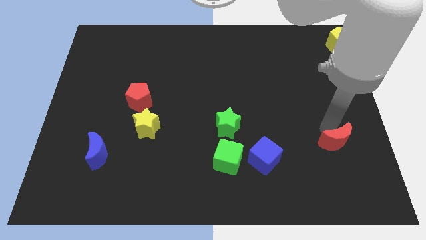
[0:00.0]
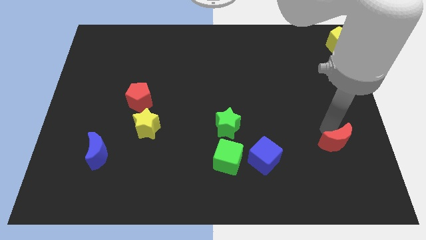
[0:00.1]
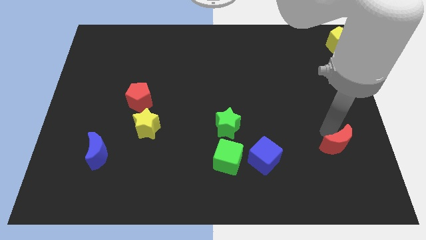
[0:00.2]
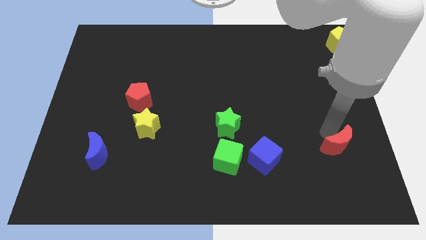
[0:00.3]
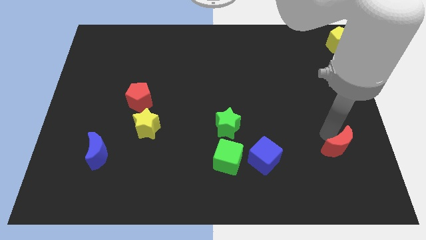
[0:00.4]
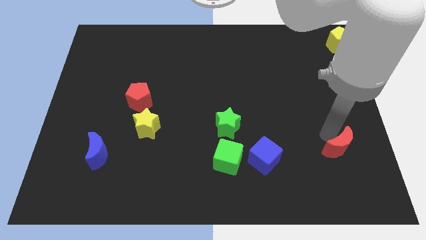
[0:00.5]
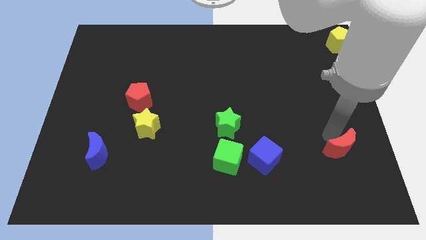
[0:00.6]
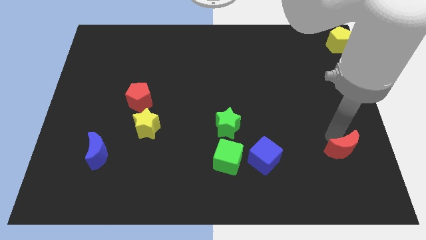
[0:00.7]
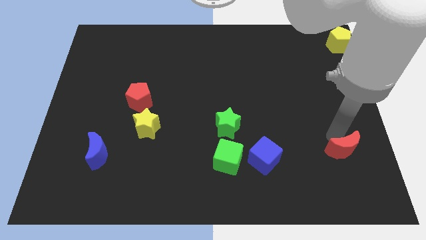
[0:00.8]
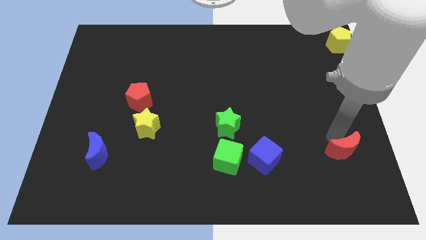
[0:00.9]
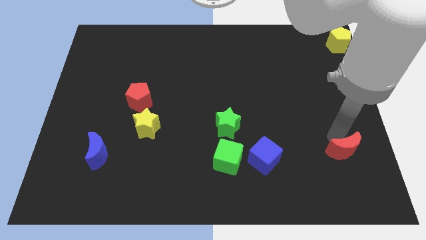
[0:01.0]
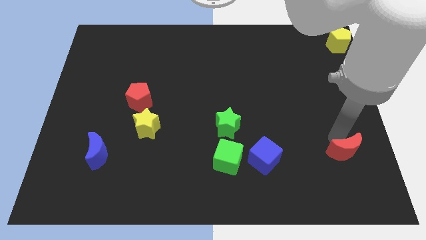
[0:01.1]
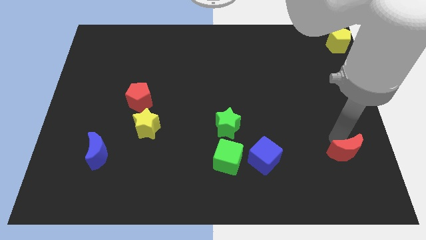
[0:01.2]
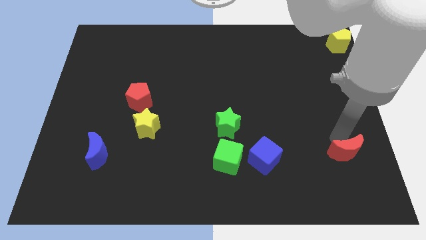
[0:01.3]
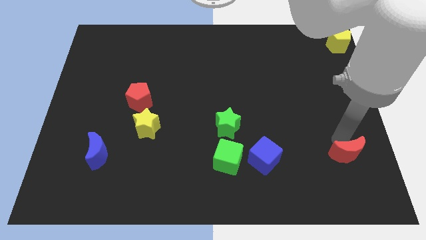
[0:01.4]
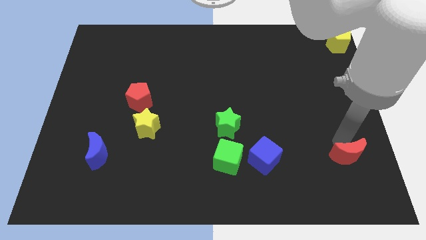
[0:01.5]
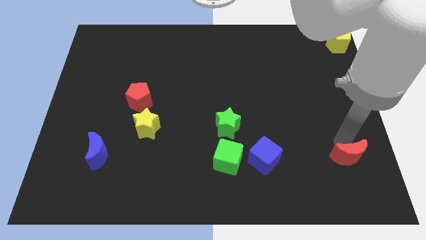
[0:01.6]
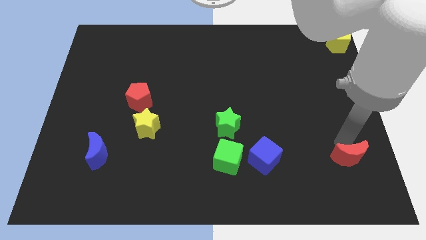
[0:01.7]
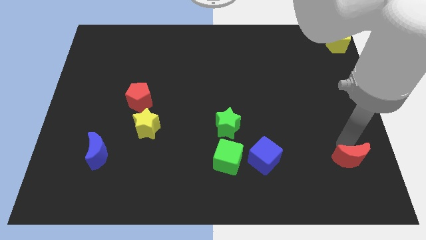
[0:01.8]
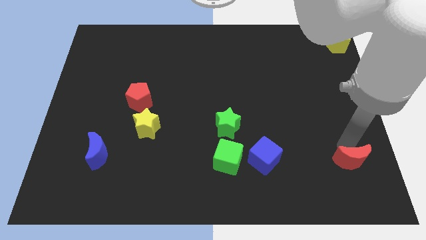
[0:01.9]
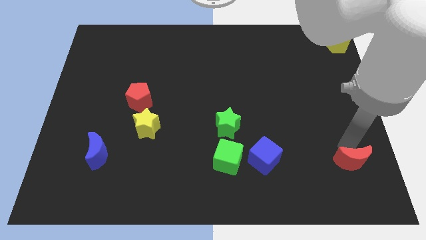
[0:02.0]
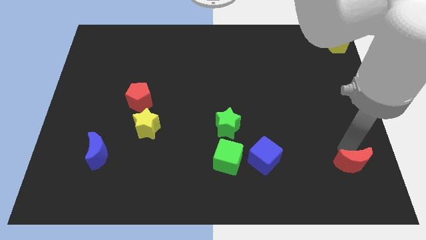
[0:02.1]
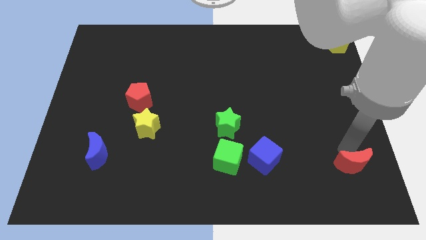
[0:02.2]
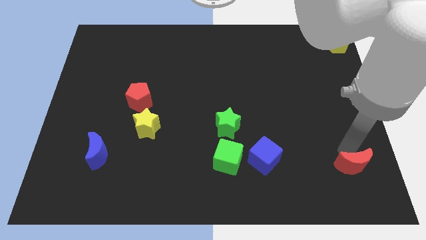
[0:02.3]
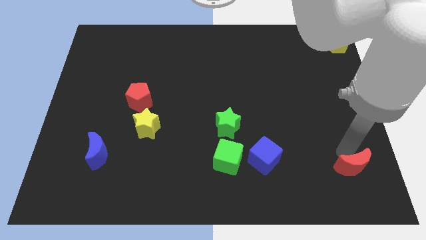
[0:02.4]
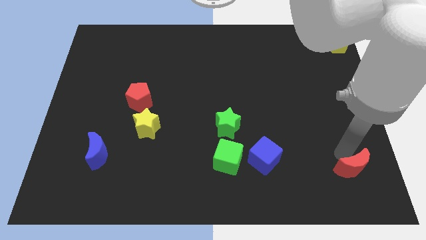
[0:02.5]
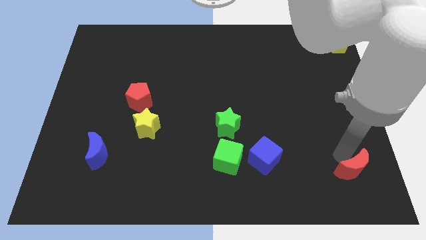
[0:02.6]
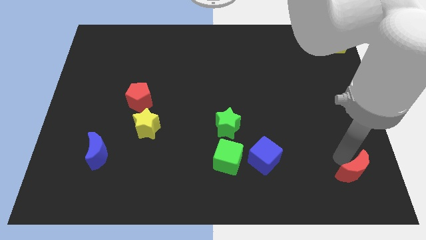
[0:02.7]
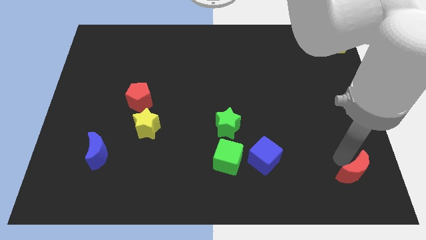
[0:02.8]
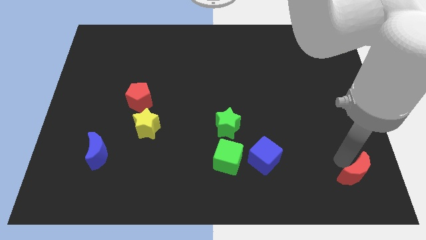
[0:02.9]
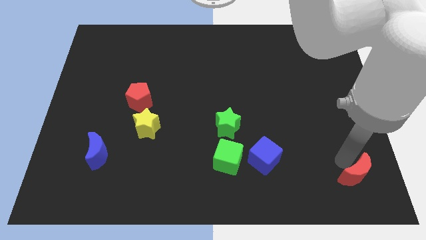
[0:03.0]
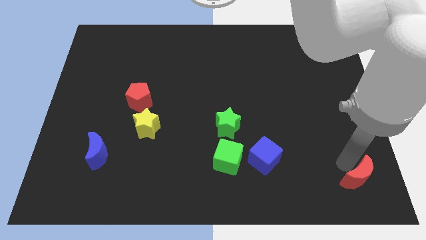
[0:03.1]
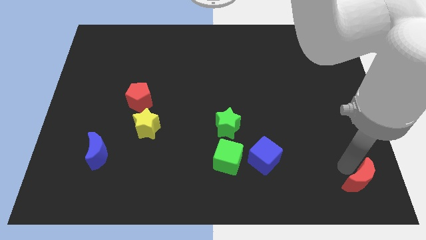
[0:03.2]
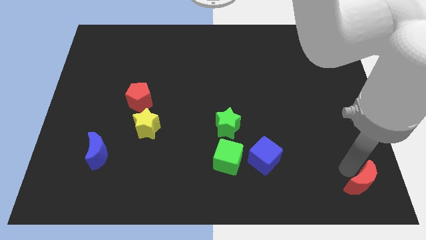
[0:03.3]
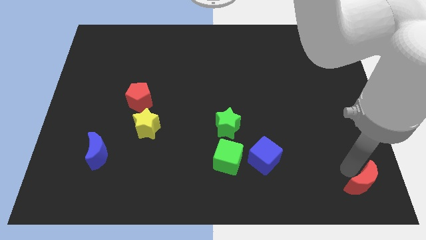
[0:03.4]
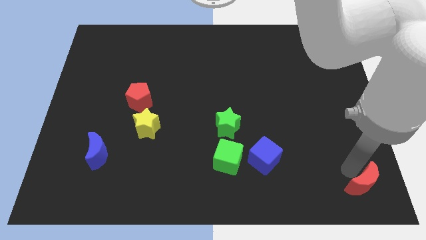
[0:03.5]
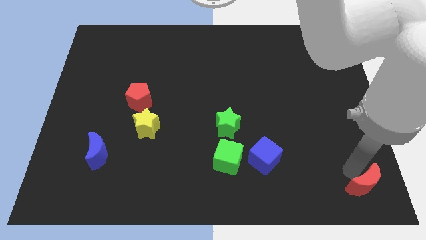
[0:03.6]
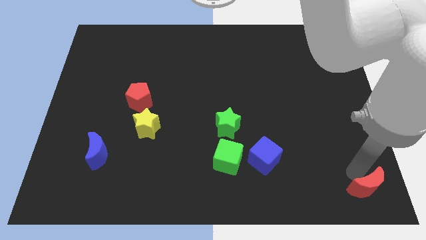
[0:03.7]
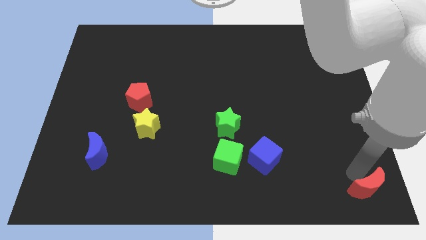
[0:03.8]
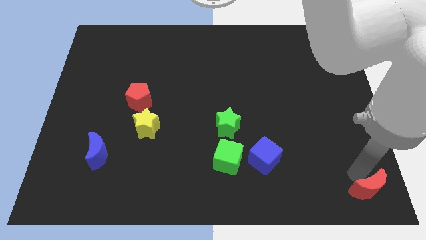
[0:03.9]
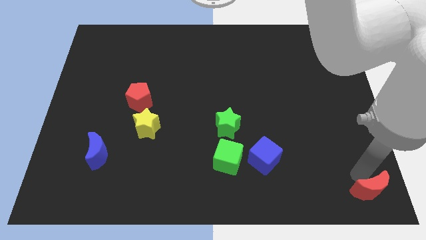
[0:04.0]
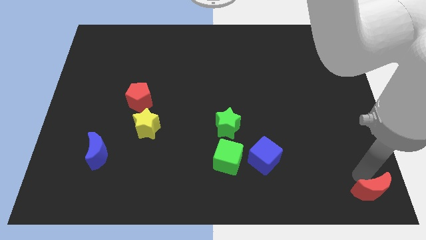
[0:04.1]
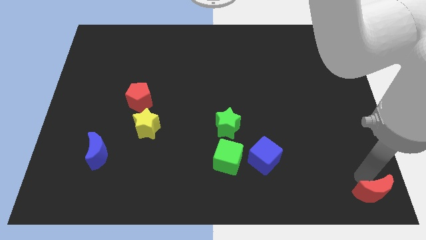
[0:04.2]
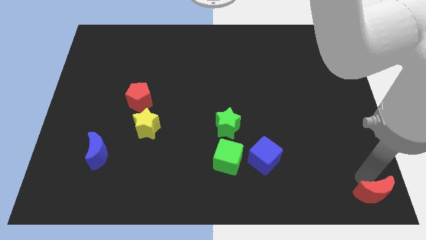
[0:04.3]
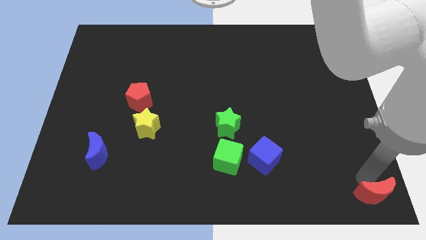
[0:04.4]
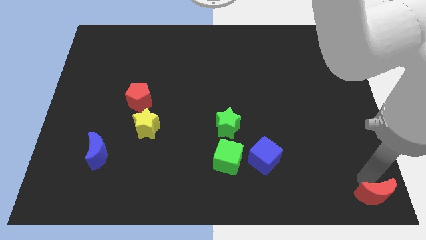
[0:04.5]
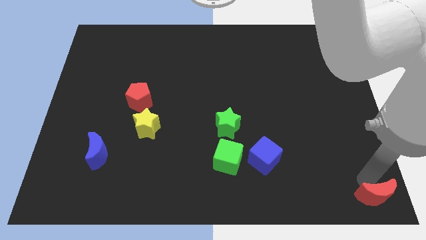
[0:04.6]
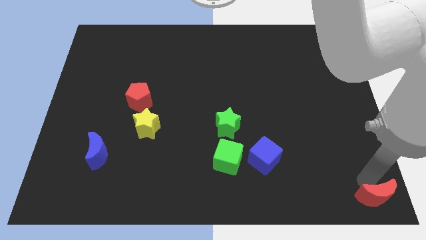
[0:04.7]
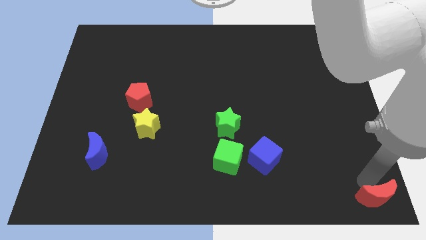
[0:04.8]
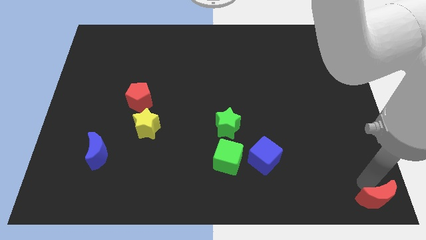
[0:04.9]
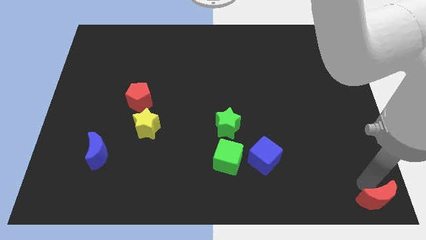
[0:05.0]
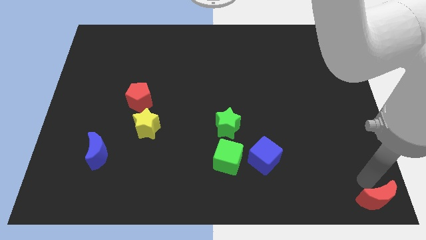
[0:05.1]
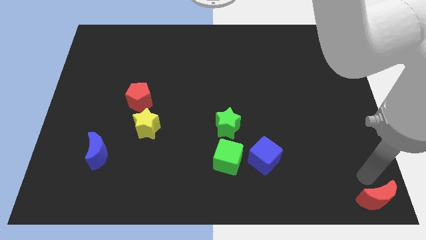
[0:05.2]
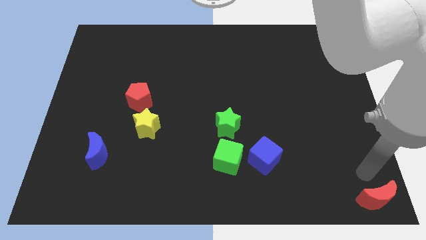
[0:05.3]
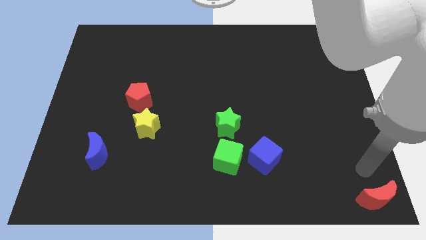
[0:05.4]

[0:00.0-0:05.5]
push the red crescent to the bottom right corner of the board

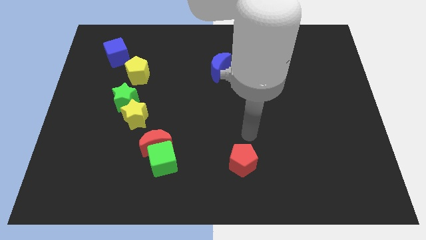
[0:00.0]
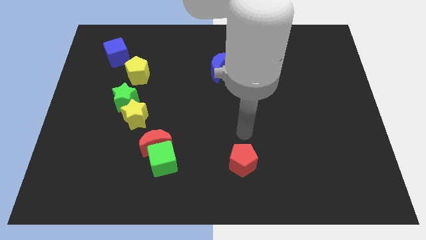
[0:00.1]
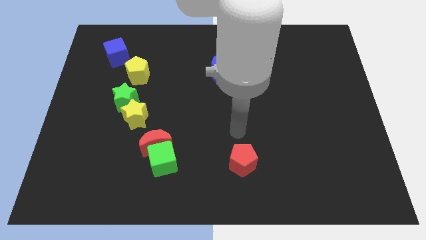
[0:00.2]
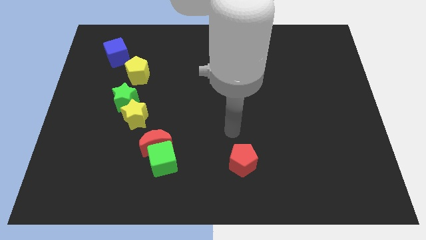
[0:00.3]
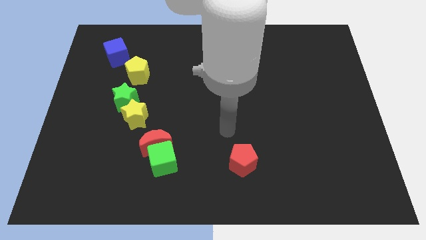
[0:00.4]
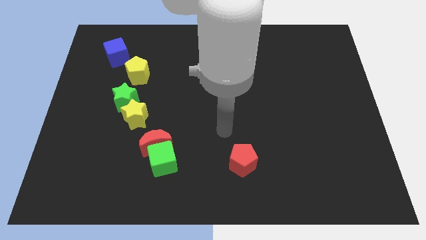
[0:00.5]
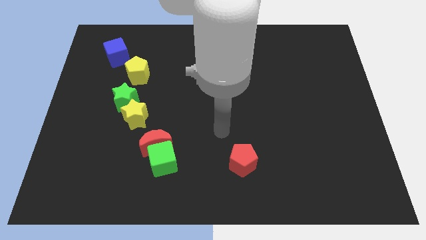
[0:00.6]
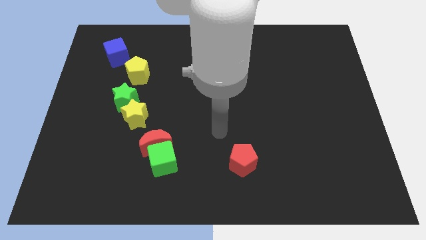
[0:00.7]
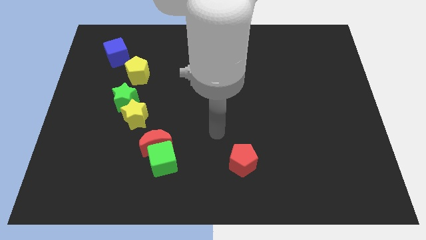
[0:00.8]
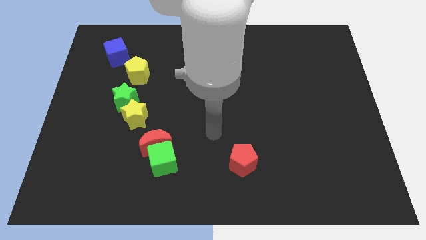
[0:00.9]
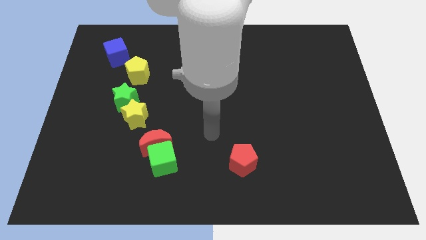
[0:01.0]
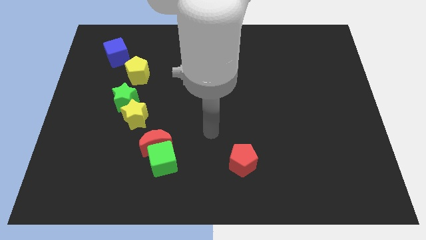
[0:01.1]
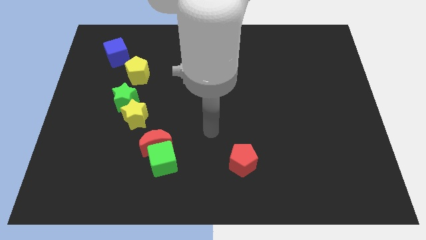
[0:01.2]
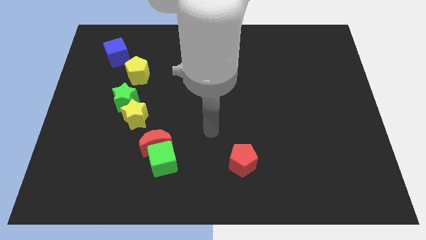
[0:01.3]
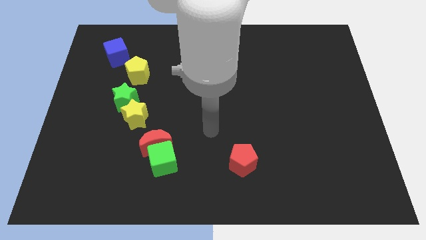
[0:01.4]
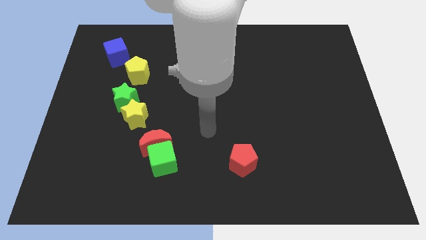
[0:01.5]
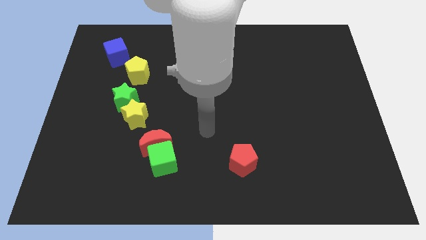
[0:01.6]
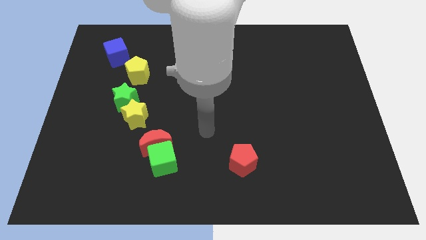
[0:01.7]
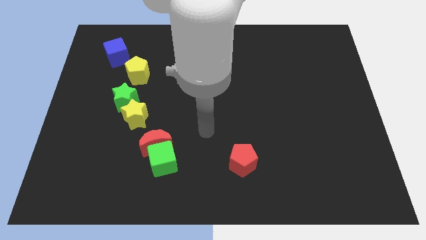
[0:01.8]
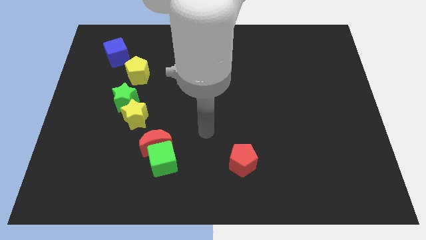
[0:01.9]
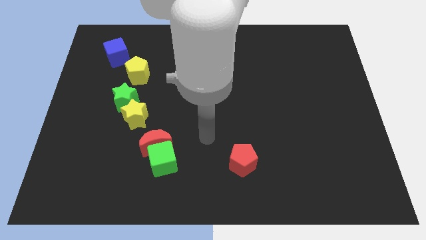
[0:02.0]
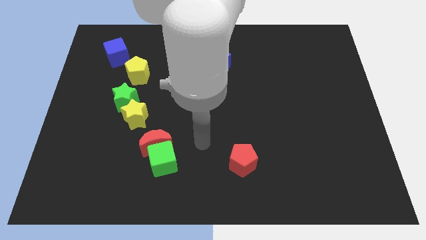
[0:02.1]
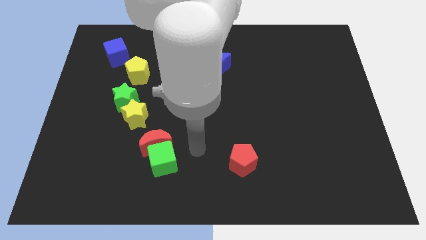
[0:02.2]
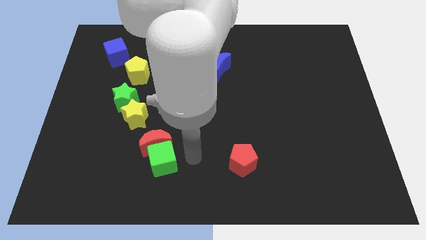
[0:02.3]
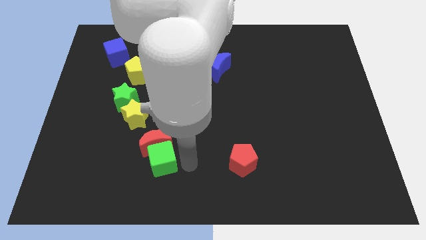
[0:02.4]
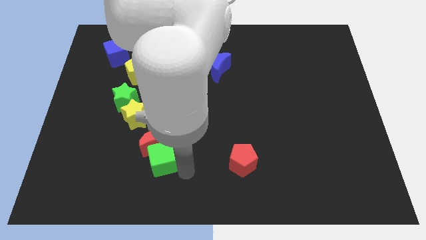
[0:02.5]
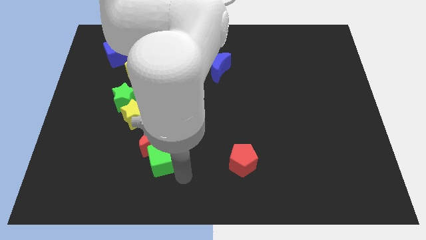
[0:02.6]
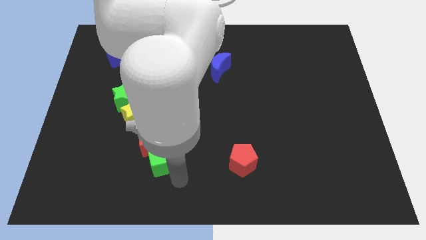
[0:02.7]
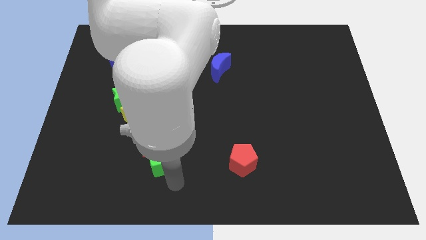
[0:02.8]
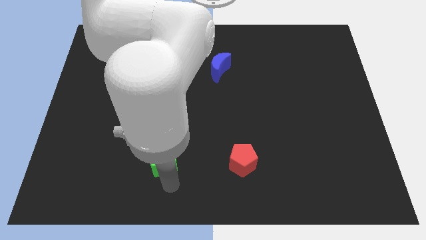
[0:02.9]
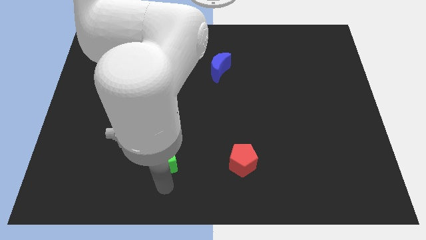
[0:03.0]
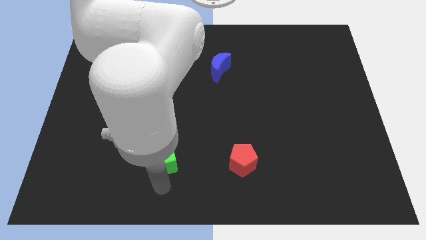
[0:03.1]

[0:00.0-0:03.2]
move the arm to the bottom of the green cube
